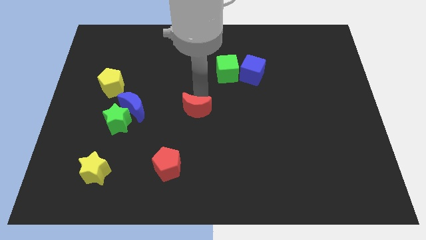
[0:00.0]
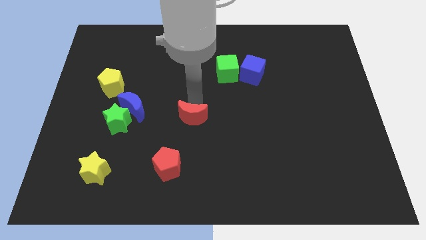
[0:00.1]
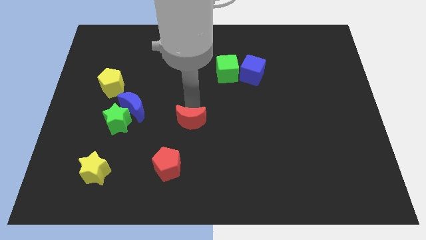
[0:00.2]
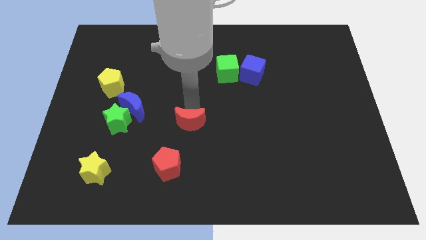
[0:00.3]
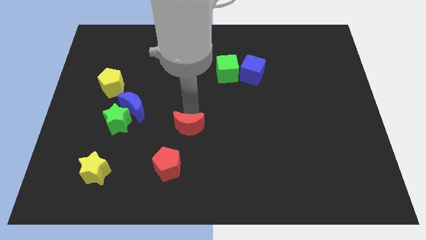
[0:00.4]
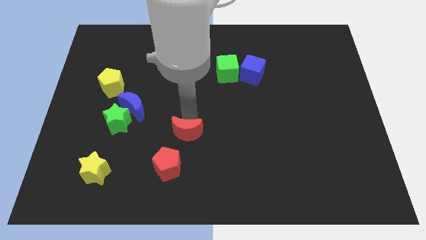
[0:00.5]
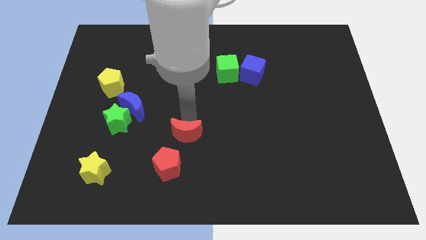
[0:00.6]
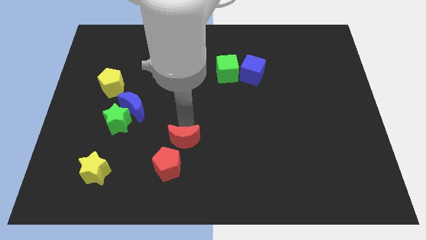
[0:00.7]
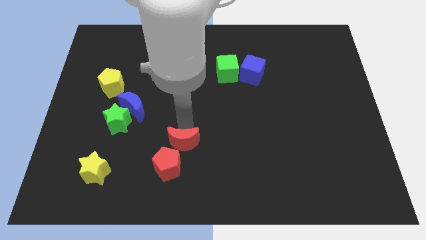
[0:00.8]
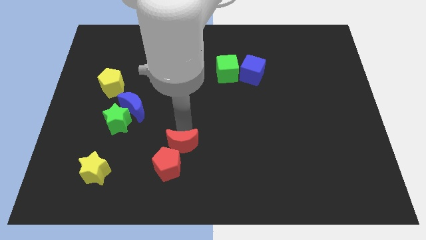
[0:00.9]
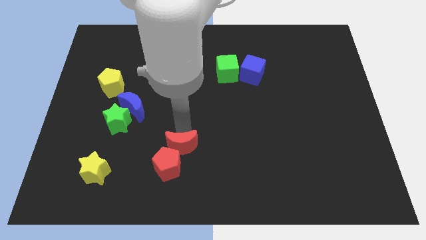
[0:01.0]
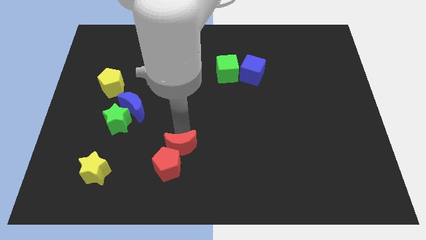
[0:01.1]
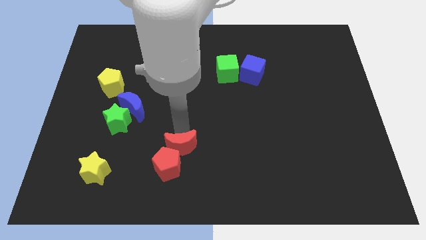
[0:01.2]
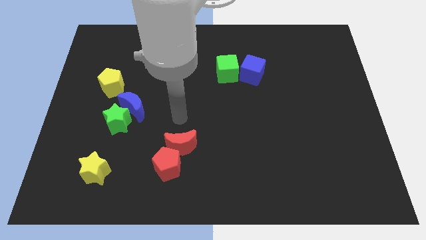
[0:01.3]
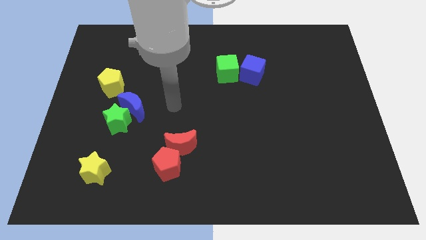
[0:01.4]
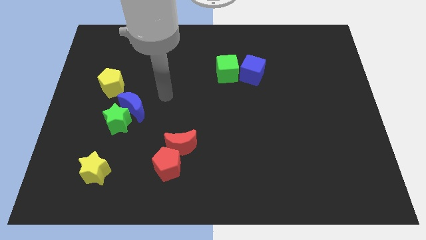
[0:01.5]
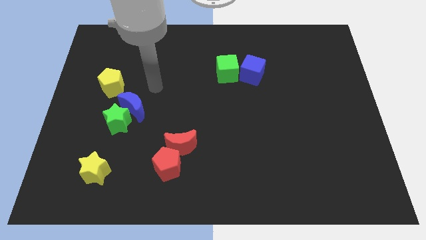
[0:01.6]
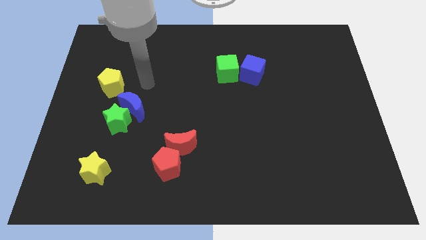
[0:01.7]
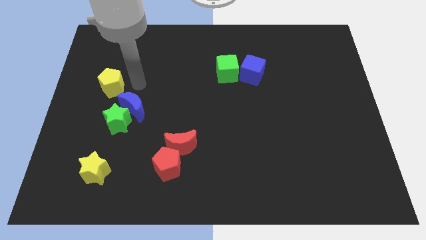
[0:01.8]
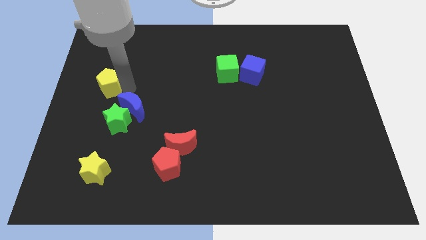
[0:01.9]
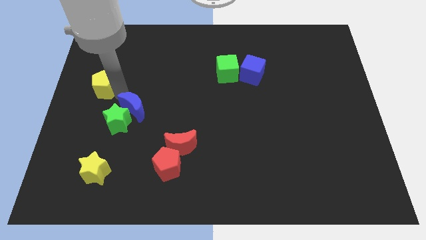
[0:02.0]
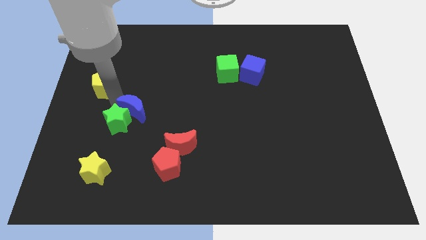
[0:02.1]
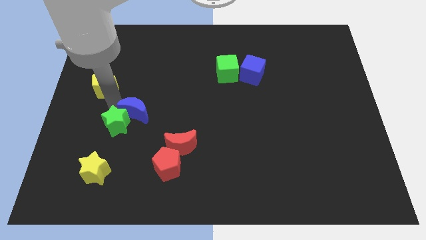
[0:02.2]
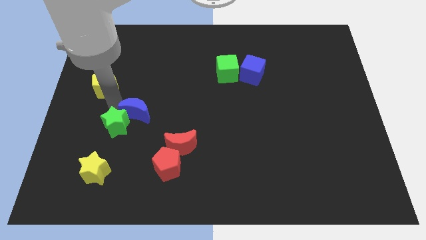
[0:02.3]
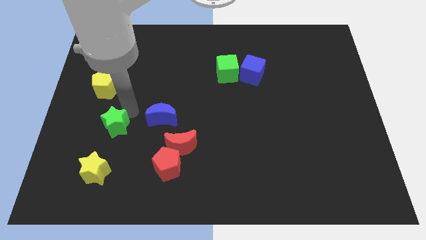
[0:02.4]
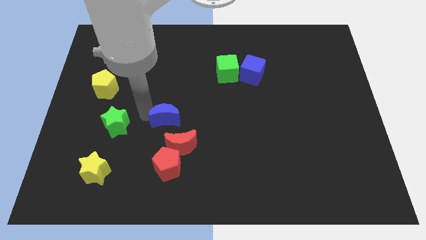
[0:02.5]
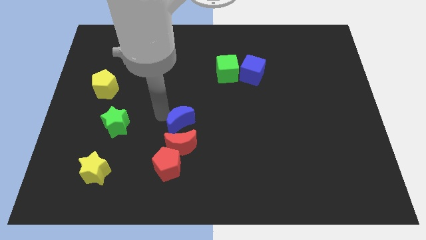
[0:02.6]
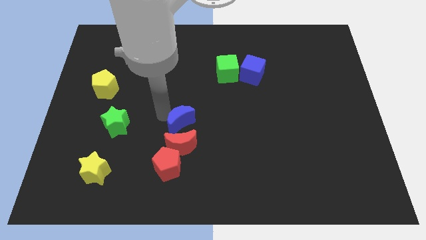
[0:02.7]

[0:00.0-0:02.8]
place the blue moon right to the green star

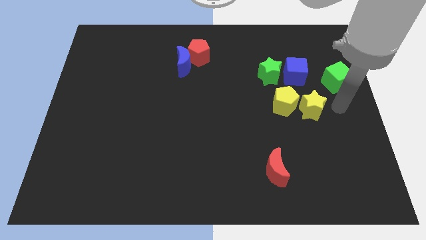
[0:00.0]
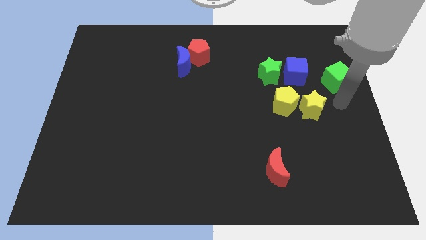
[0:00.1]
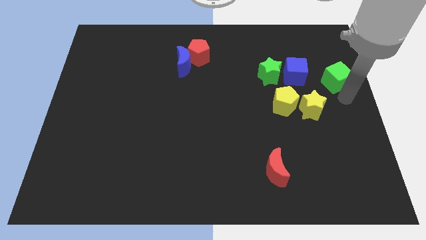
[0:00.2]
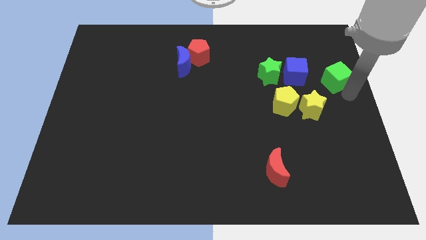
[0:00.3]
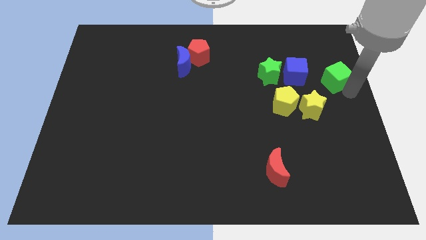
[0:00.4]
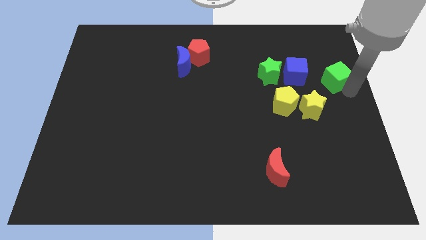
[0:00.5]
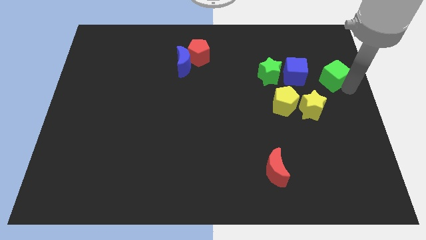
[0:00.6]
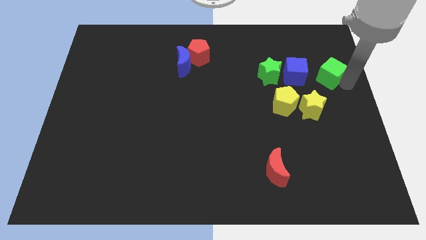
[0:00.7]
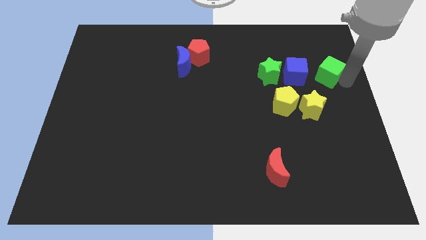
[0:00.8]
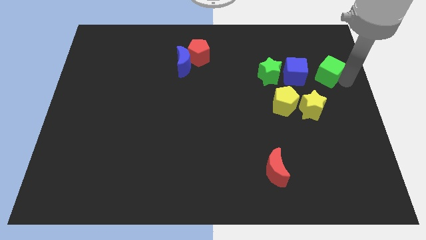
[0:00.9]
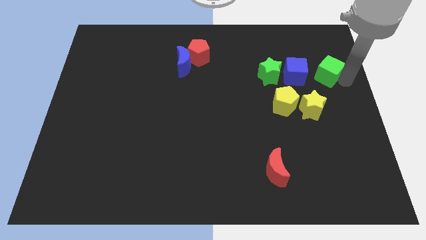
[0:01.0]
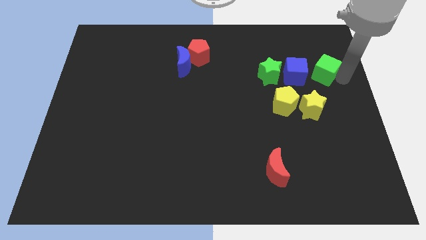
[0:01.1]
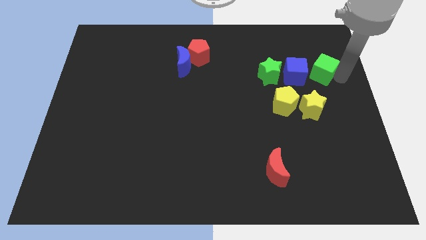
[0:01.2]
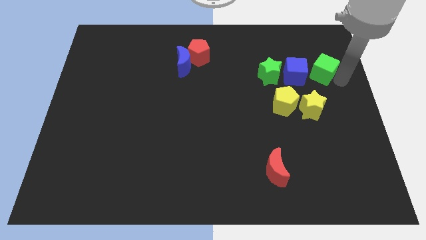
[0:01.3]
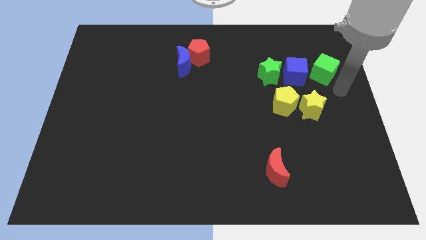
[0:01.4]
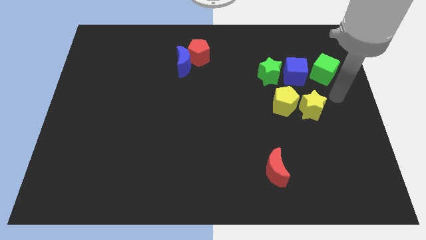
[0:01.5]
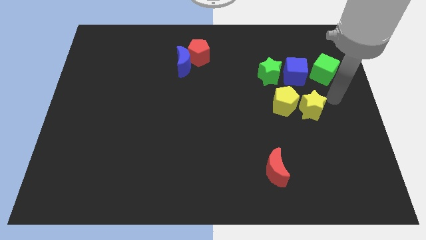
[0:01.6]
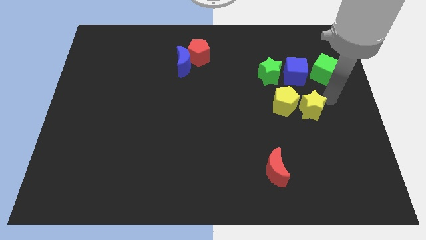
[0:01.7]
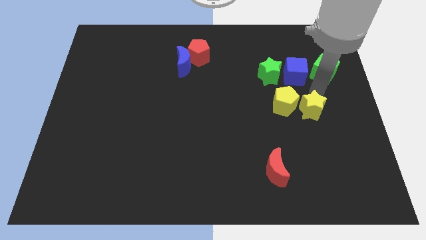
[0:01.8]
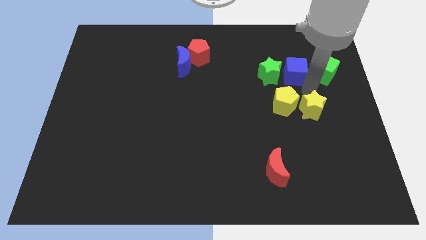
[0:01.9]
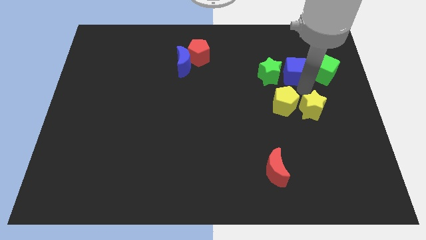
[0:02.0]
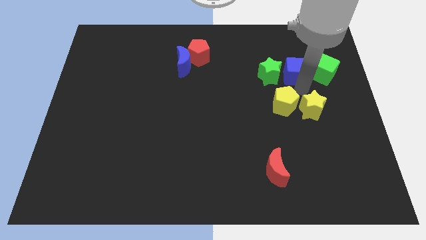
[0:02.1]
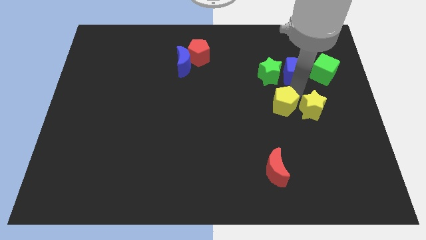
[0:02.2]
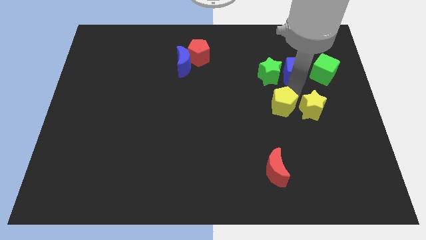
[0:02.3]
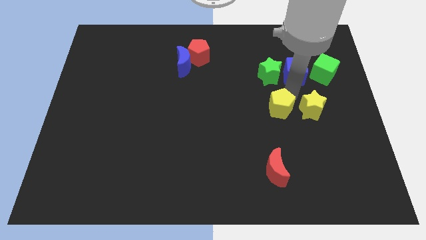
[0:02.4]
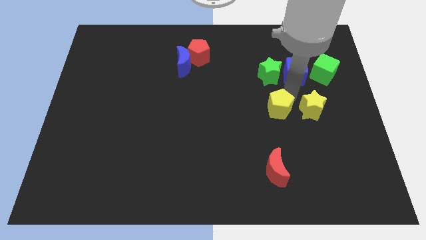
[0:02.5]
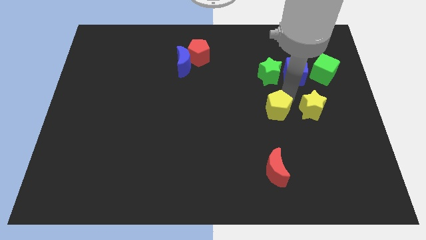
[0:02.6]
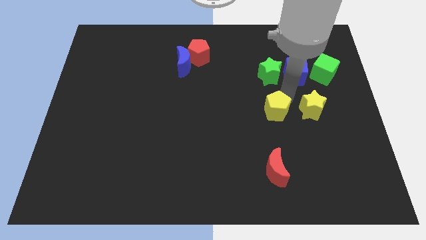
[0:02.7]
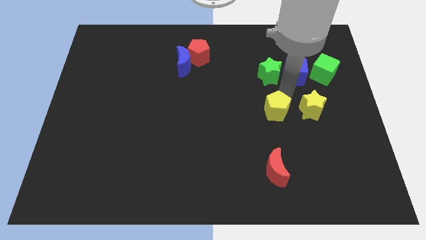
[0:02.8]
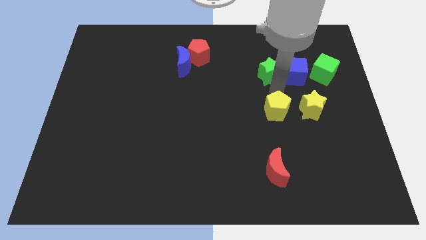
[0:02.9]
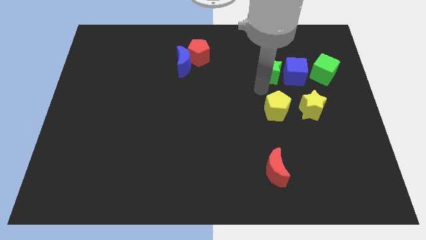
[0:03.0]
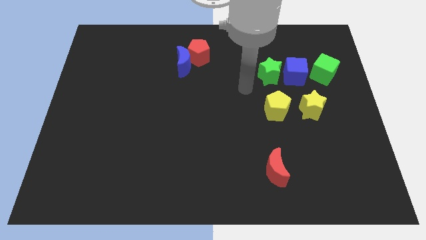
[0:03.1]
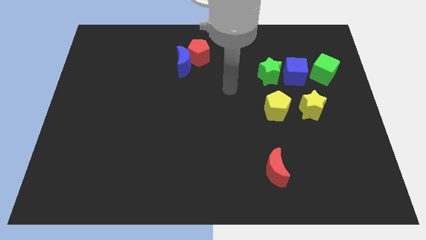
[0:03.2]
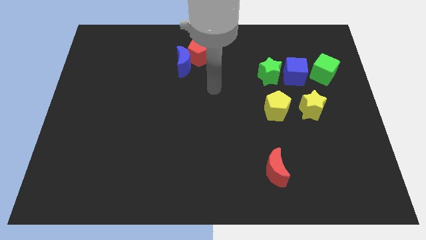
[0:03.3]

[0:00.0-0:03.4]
place the green cube right to the blue cube

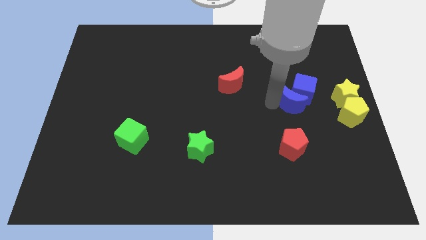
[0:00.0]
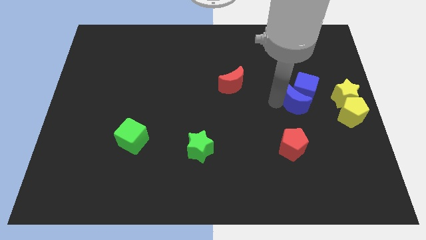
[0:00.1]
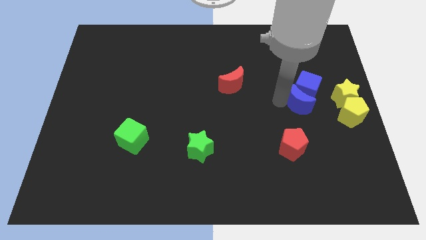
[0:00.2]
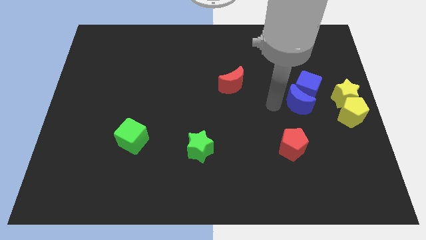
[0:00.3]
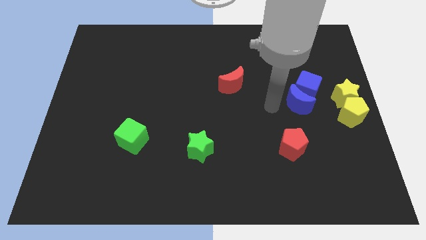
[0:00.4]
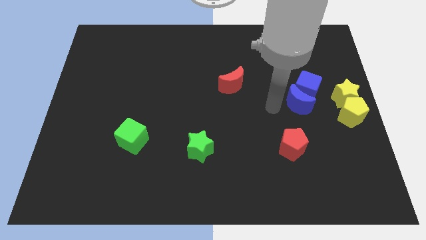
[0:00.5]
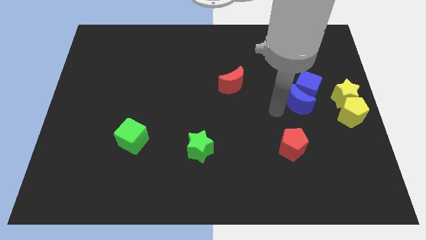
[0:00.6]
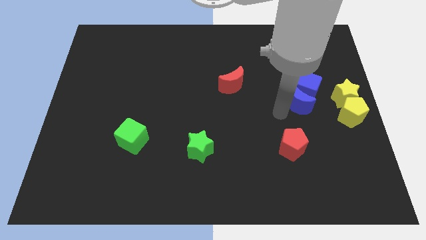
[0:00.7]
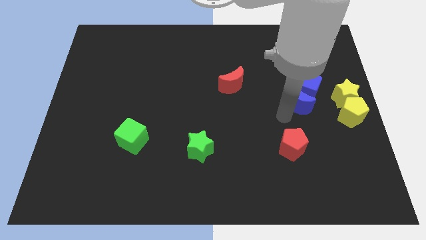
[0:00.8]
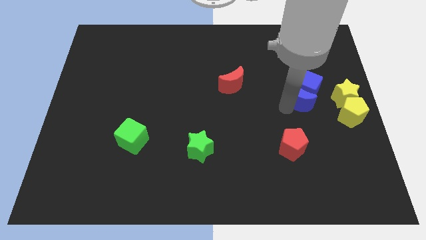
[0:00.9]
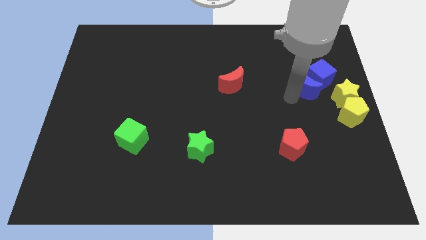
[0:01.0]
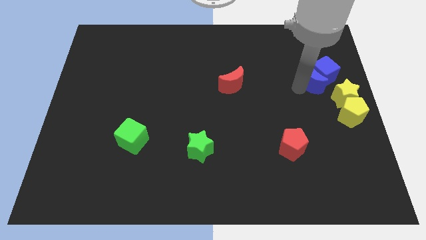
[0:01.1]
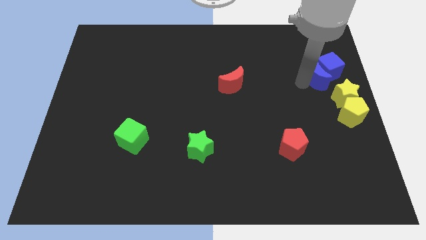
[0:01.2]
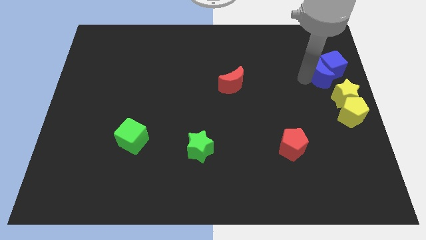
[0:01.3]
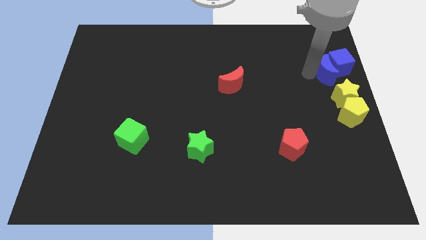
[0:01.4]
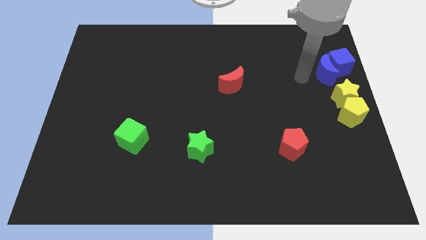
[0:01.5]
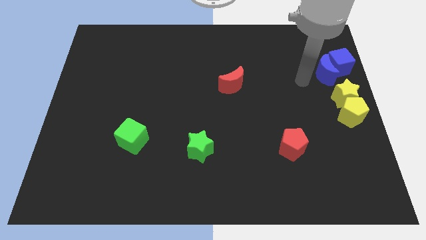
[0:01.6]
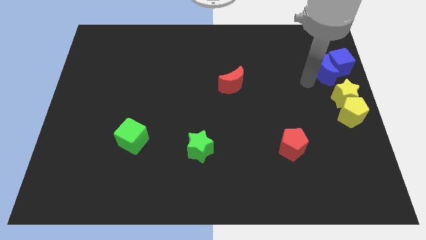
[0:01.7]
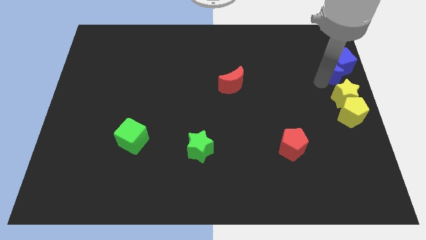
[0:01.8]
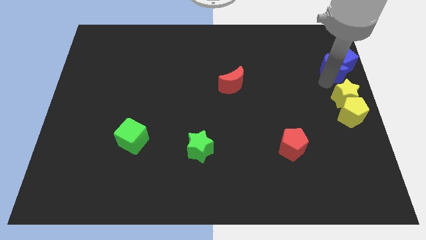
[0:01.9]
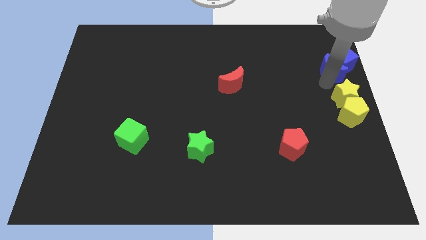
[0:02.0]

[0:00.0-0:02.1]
push the blue blocks to the top side of the yellow star

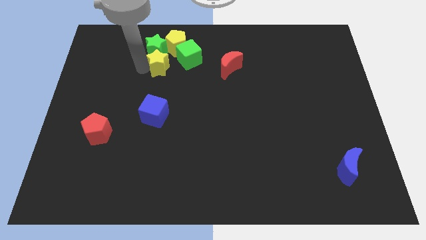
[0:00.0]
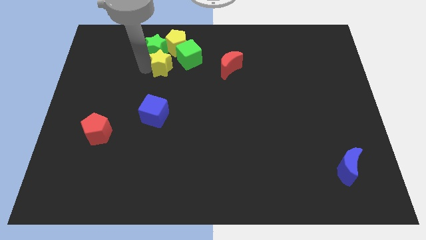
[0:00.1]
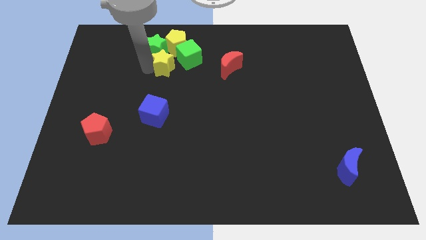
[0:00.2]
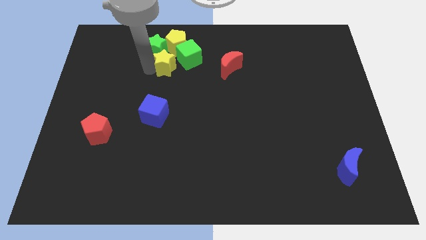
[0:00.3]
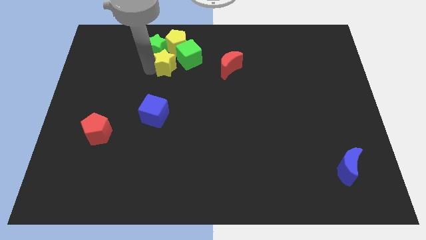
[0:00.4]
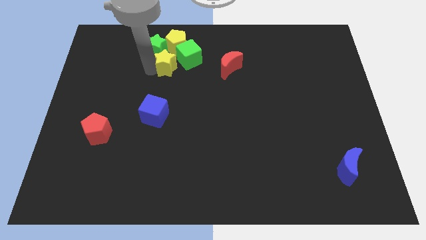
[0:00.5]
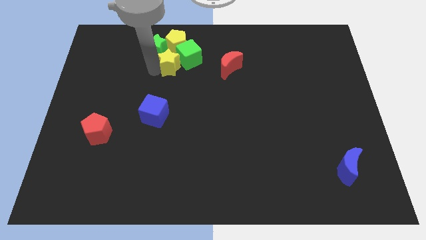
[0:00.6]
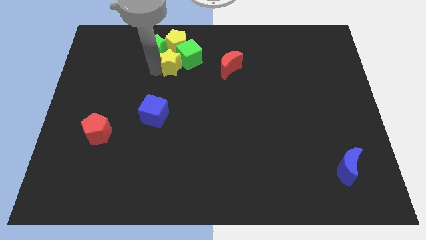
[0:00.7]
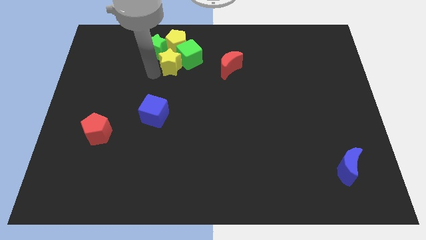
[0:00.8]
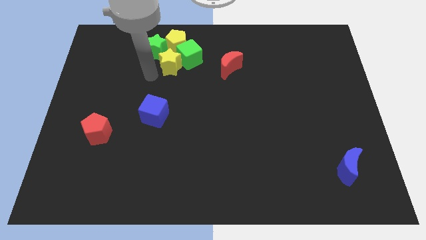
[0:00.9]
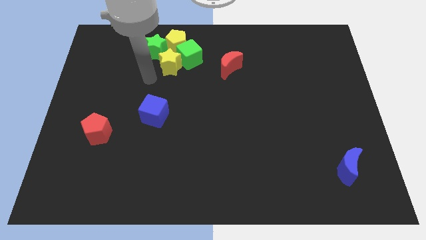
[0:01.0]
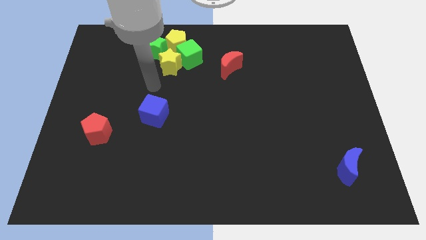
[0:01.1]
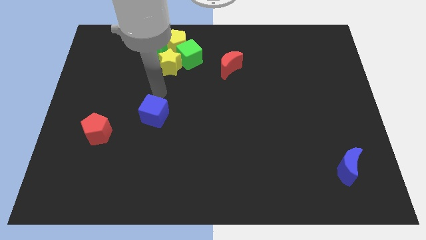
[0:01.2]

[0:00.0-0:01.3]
push the yellow star into green cube
